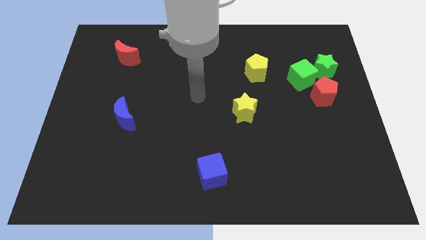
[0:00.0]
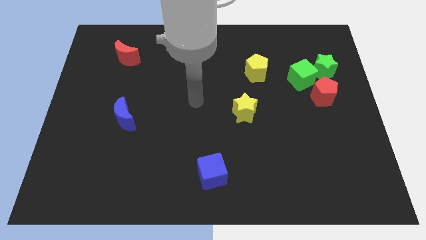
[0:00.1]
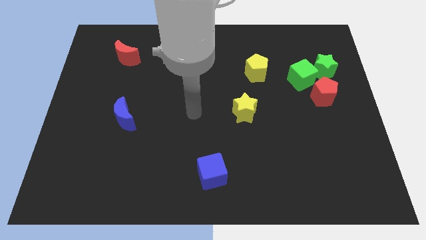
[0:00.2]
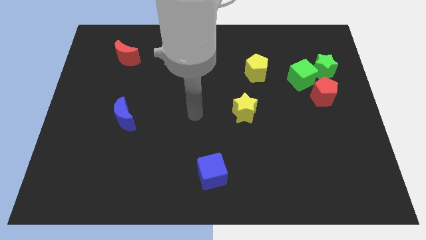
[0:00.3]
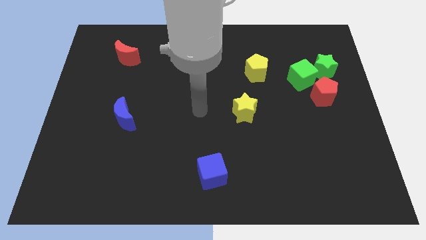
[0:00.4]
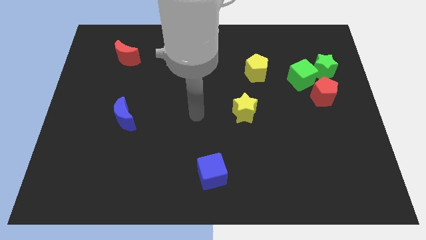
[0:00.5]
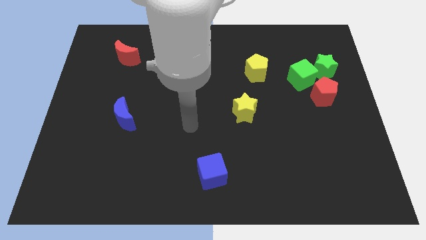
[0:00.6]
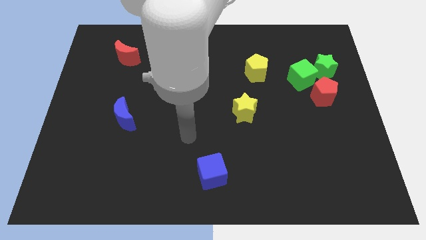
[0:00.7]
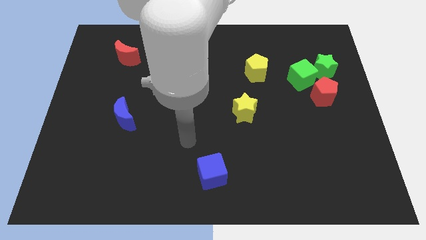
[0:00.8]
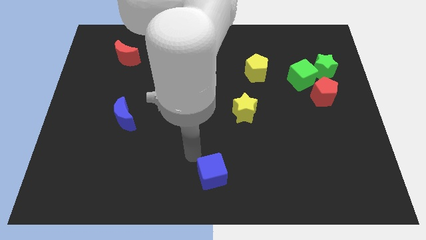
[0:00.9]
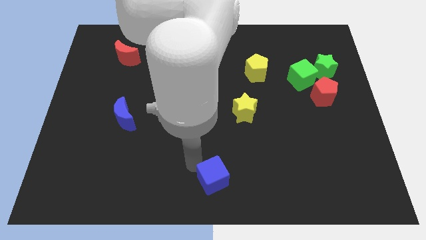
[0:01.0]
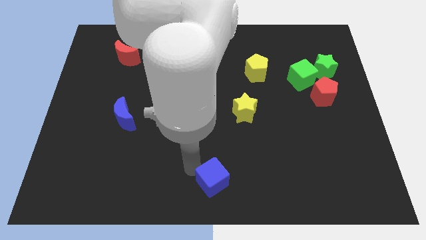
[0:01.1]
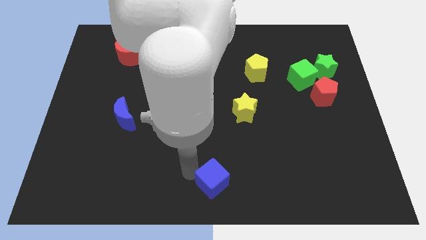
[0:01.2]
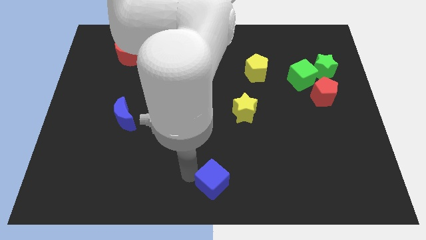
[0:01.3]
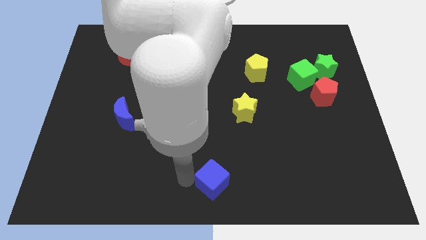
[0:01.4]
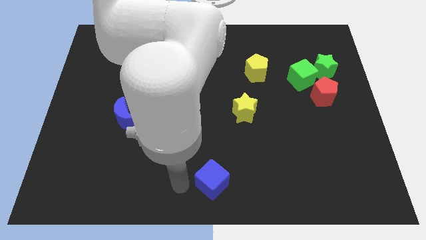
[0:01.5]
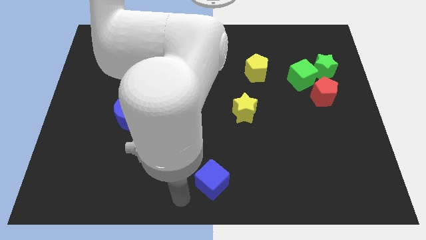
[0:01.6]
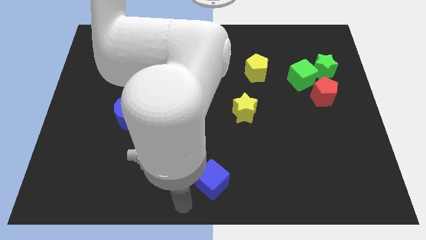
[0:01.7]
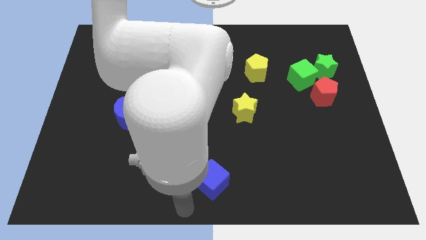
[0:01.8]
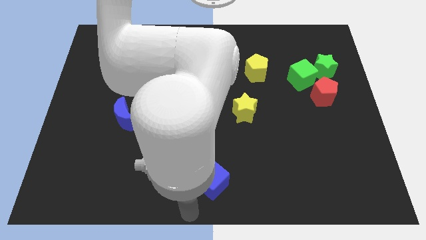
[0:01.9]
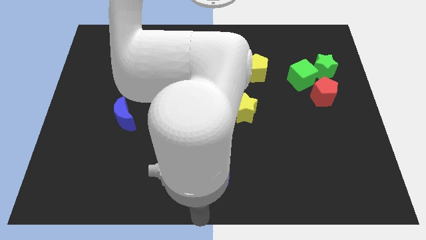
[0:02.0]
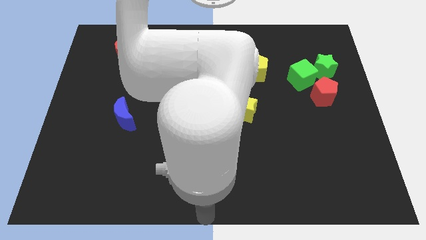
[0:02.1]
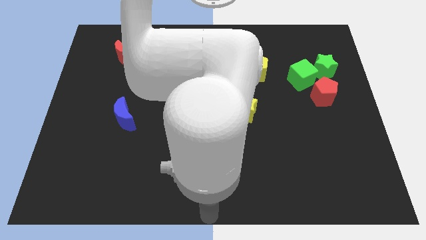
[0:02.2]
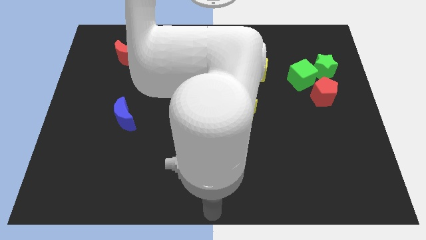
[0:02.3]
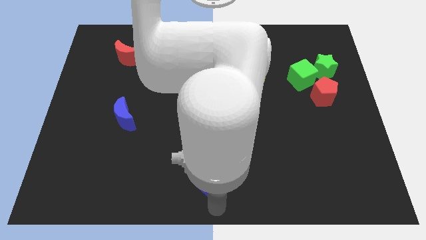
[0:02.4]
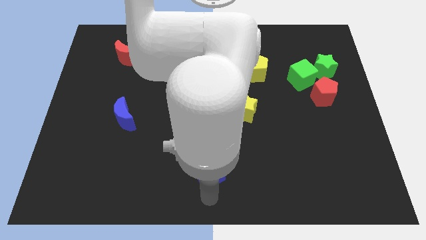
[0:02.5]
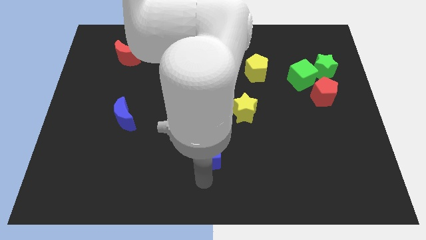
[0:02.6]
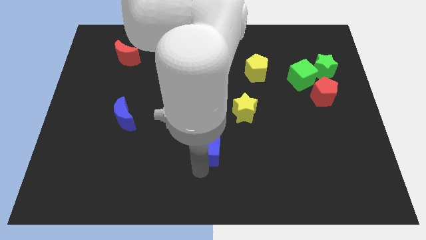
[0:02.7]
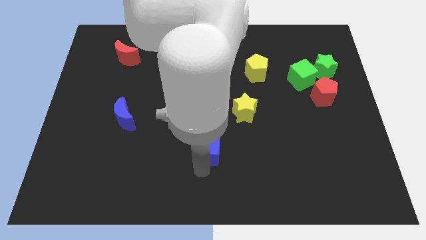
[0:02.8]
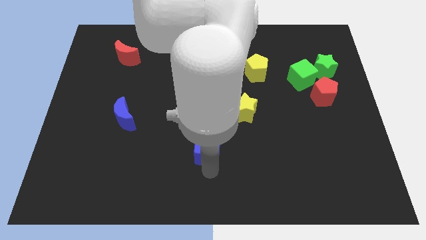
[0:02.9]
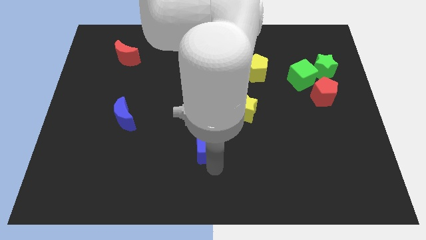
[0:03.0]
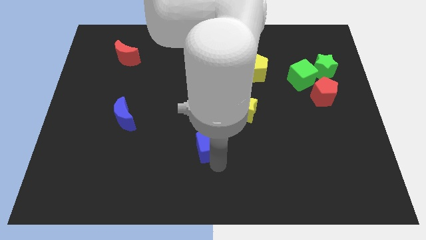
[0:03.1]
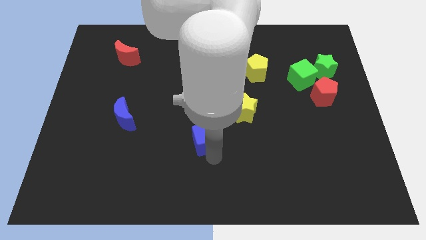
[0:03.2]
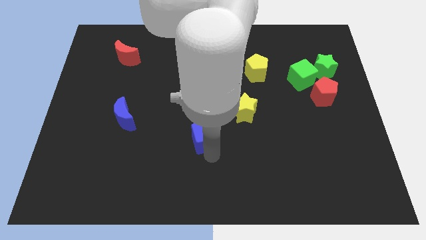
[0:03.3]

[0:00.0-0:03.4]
put the blue cube at the bottom left of the yellow star

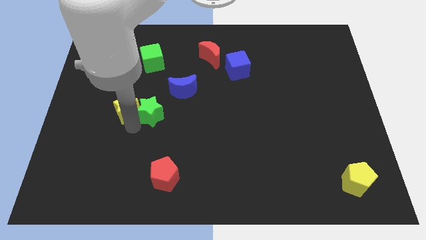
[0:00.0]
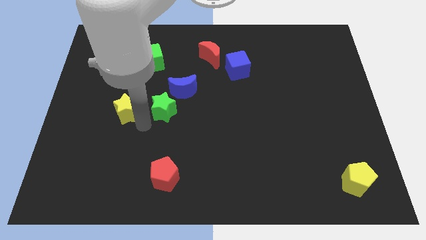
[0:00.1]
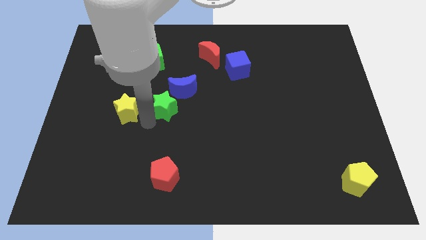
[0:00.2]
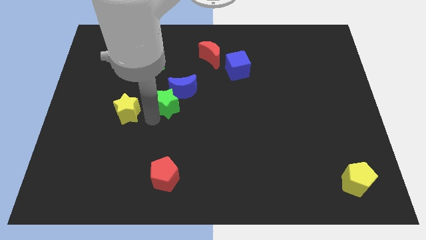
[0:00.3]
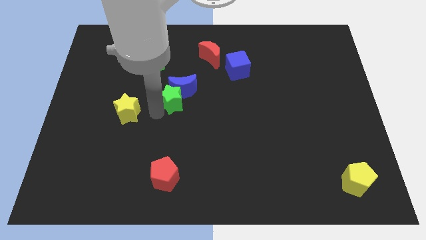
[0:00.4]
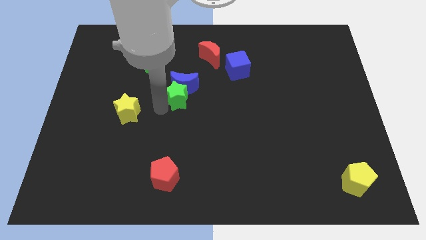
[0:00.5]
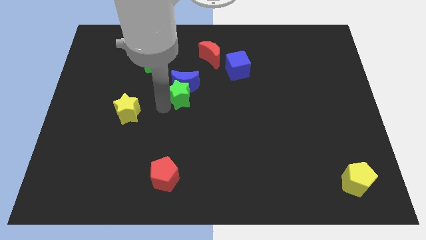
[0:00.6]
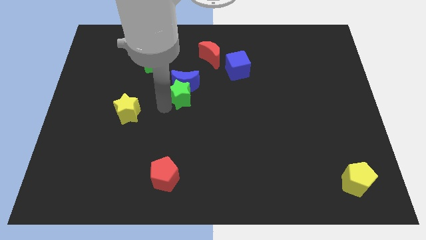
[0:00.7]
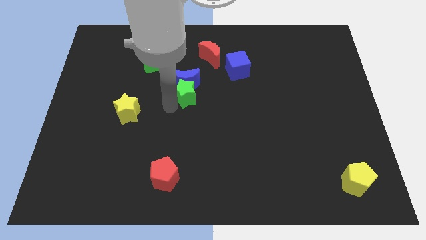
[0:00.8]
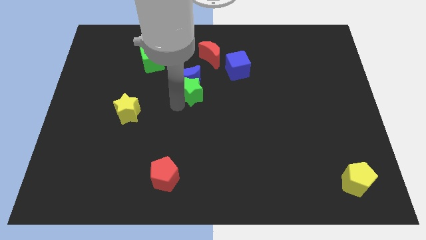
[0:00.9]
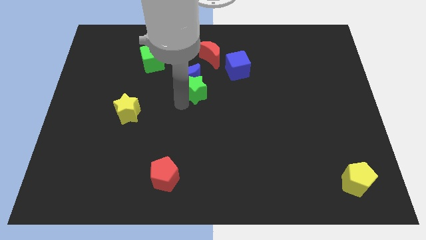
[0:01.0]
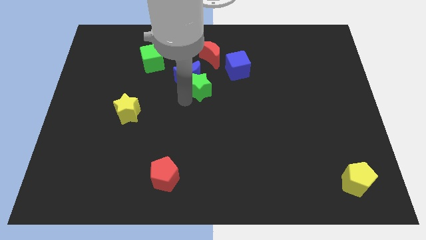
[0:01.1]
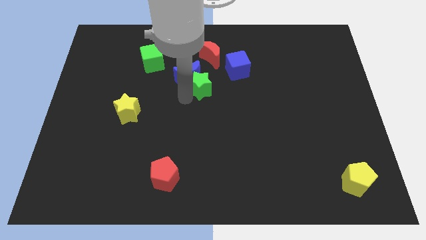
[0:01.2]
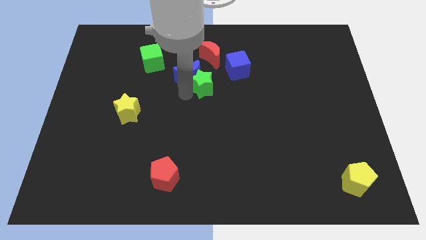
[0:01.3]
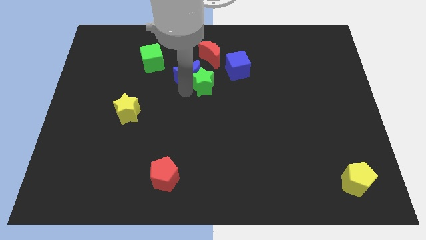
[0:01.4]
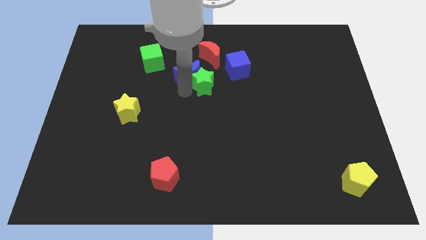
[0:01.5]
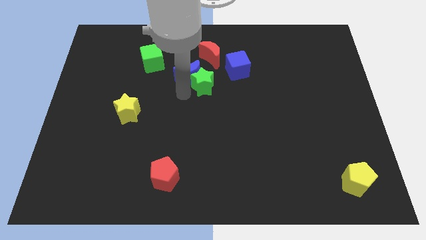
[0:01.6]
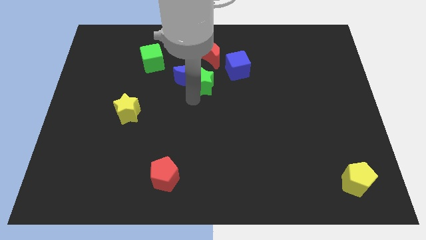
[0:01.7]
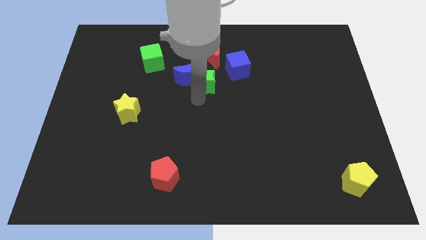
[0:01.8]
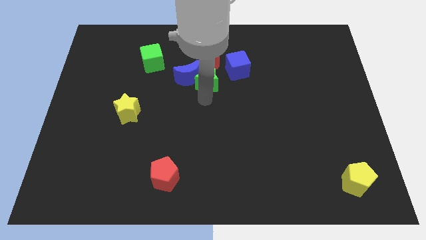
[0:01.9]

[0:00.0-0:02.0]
push green star along with blue crescent

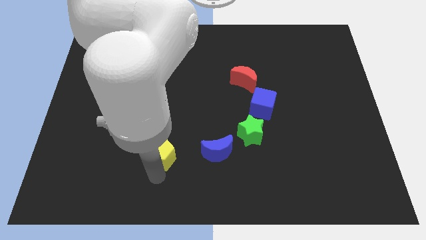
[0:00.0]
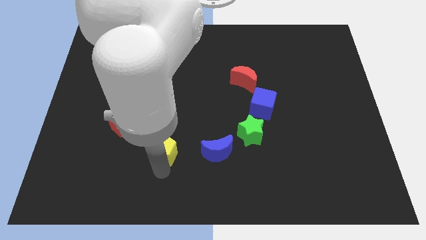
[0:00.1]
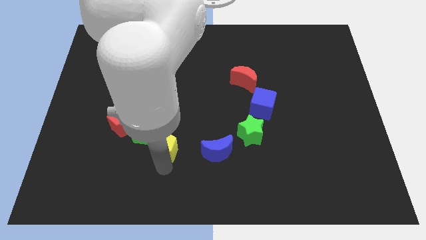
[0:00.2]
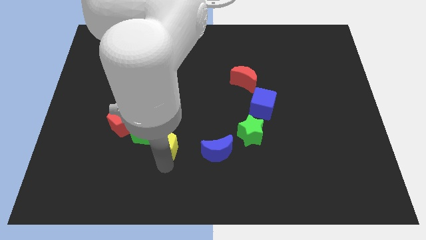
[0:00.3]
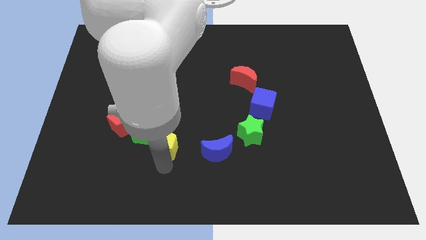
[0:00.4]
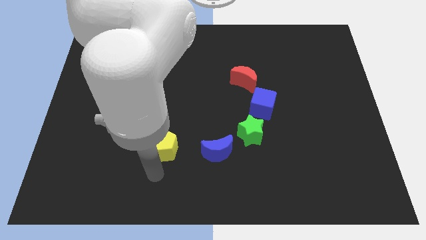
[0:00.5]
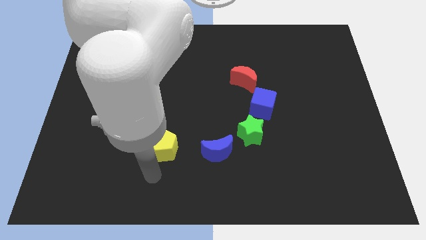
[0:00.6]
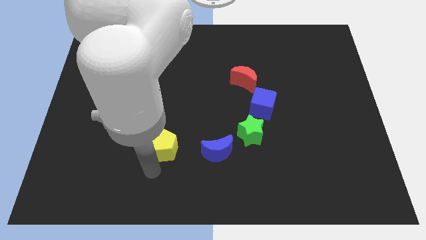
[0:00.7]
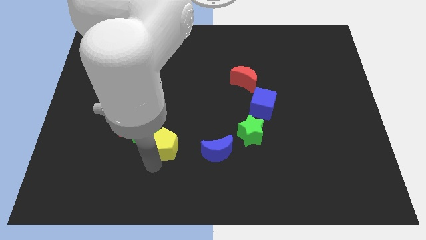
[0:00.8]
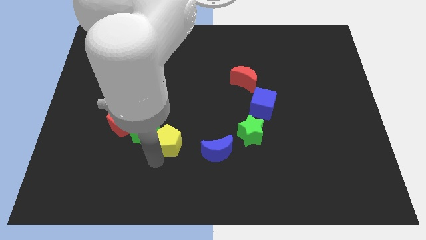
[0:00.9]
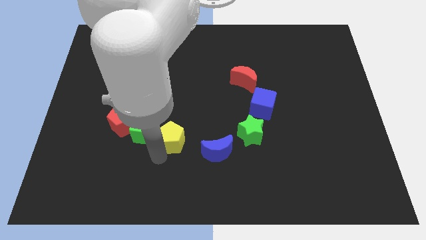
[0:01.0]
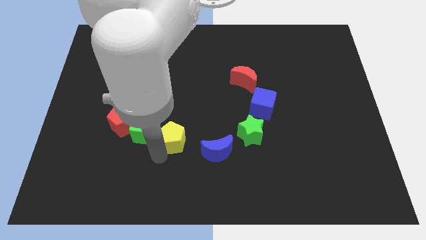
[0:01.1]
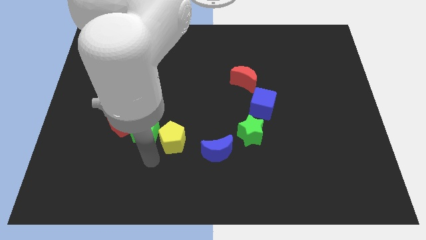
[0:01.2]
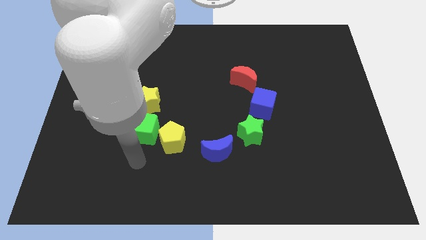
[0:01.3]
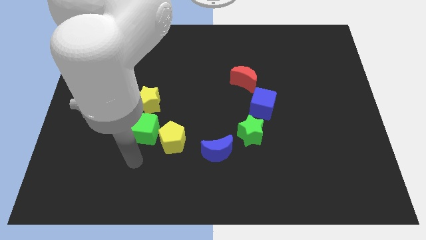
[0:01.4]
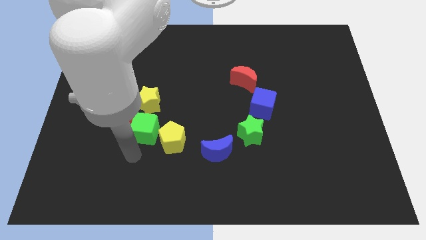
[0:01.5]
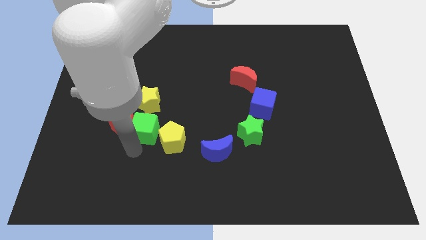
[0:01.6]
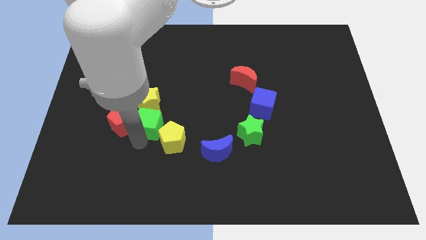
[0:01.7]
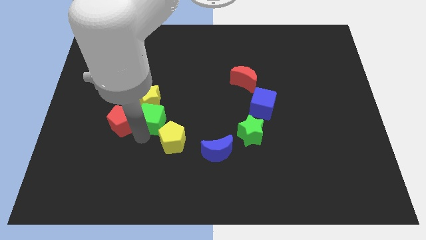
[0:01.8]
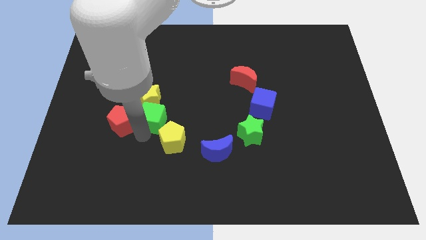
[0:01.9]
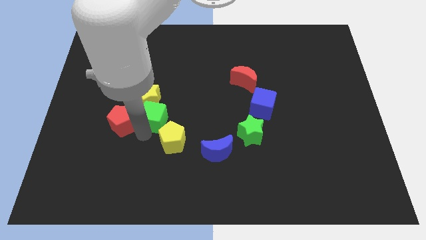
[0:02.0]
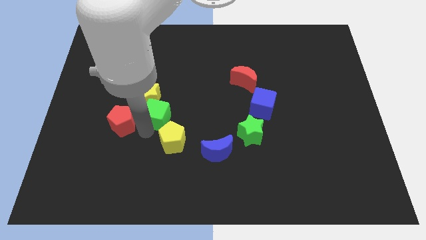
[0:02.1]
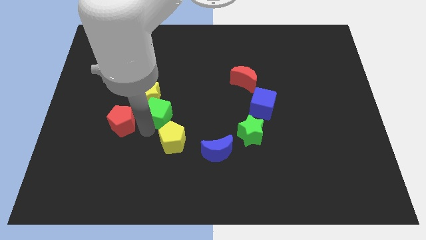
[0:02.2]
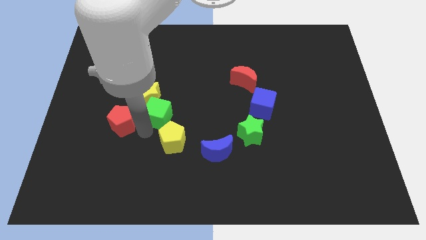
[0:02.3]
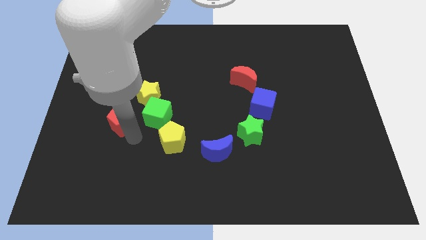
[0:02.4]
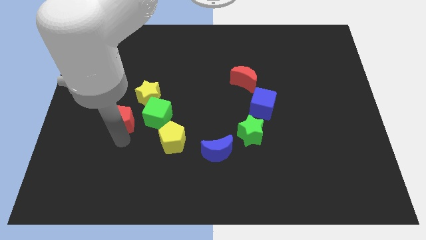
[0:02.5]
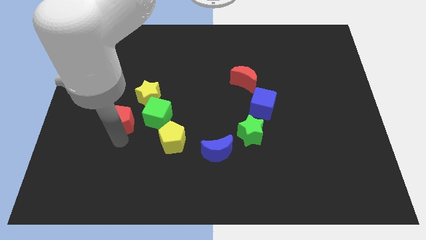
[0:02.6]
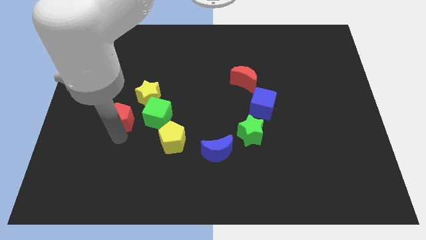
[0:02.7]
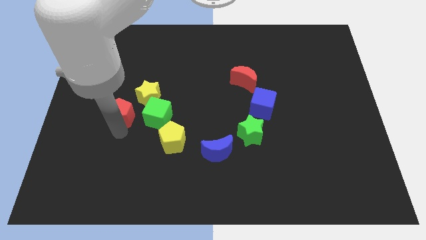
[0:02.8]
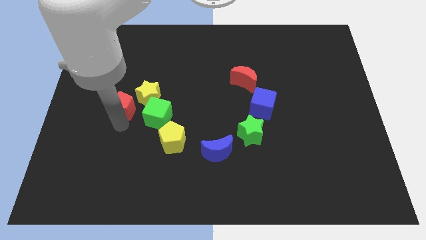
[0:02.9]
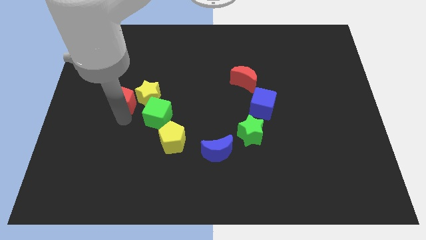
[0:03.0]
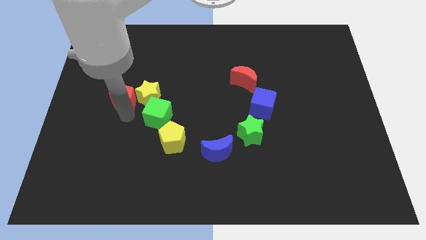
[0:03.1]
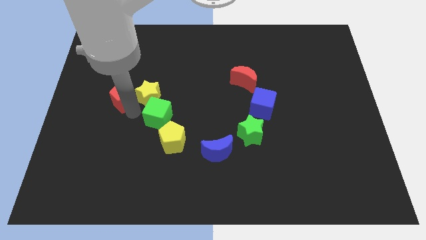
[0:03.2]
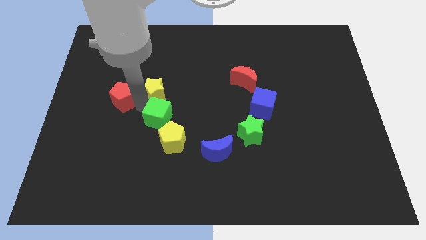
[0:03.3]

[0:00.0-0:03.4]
place the red pentagon left to the yellow star
